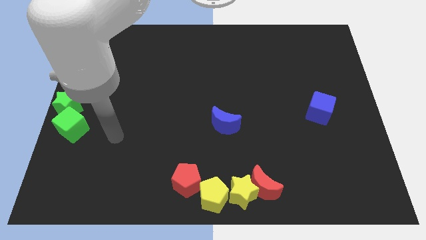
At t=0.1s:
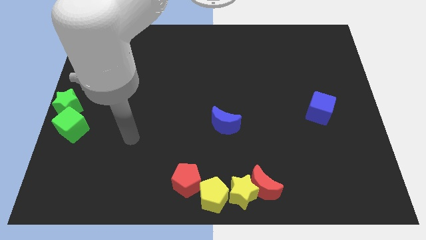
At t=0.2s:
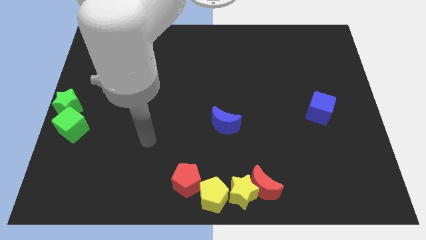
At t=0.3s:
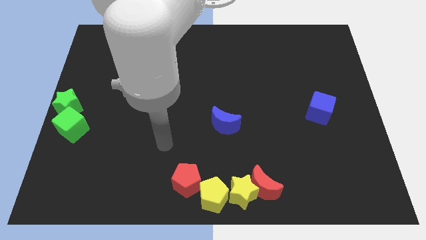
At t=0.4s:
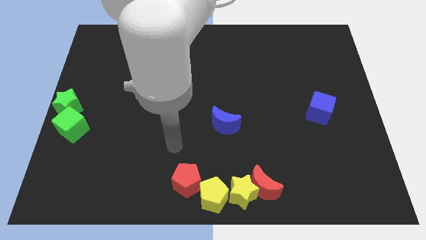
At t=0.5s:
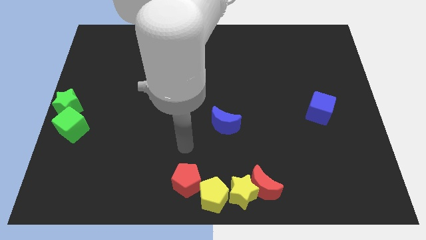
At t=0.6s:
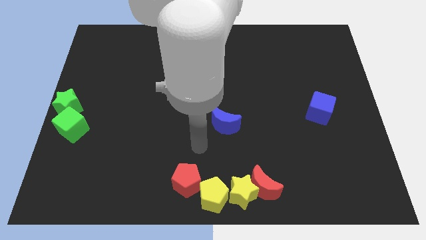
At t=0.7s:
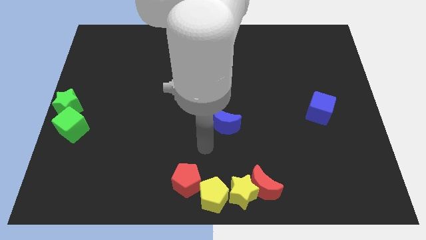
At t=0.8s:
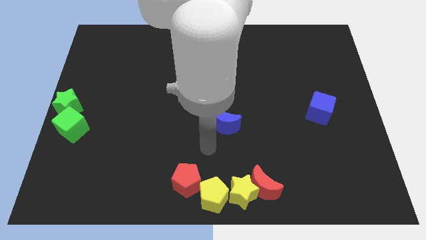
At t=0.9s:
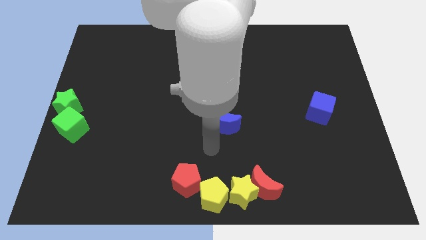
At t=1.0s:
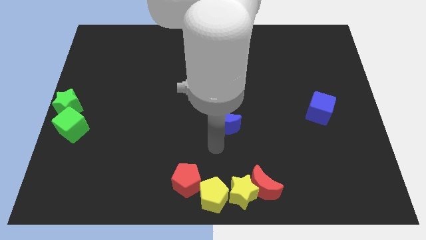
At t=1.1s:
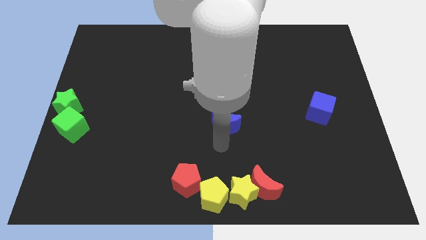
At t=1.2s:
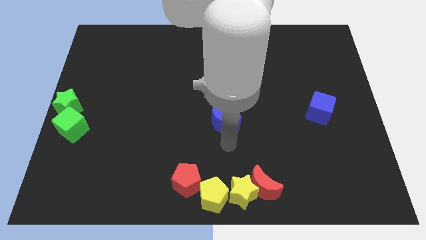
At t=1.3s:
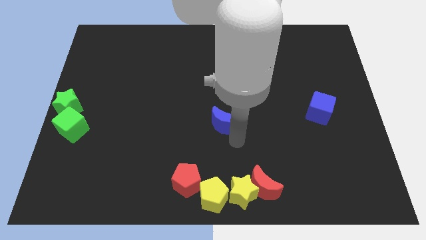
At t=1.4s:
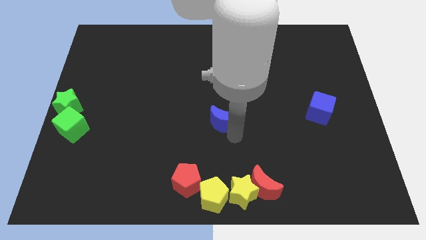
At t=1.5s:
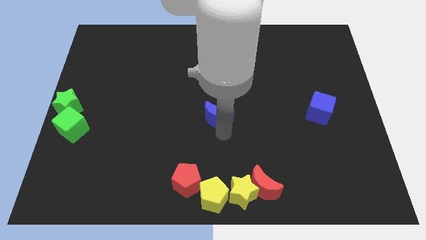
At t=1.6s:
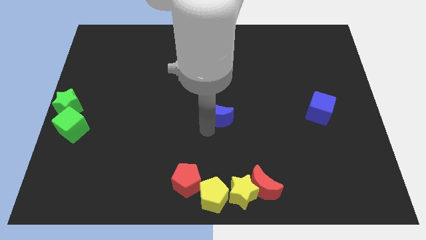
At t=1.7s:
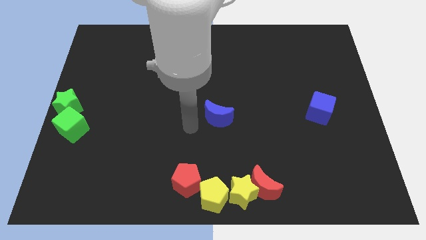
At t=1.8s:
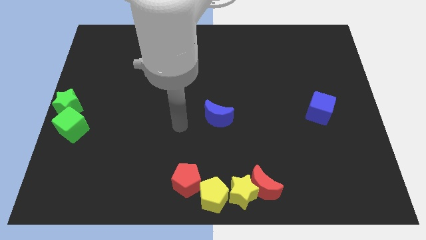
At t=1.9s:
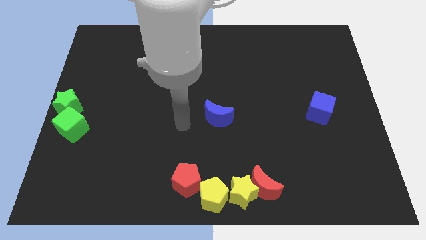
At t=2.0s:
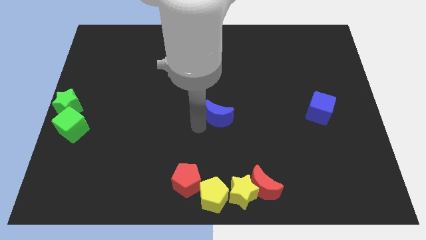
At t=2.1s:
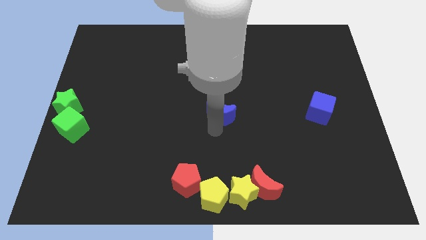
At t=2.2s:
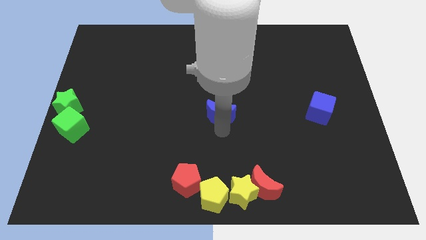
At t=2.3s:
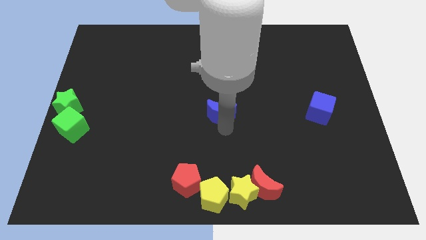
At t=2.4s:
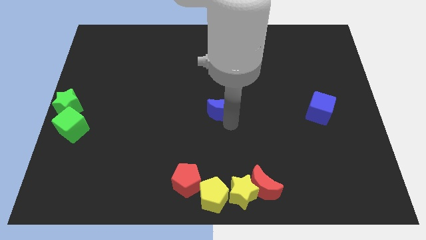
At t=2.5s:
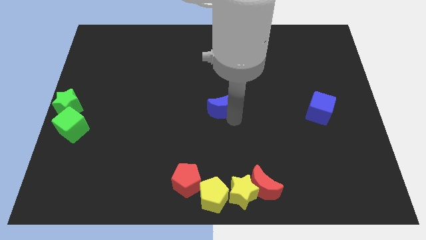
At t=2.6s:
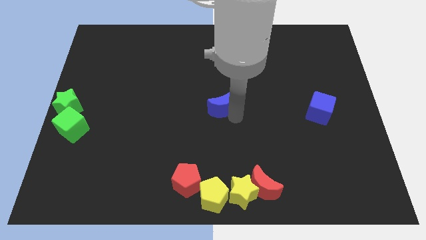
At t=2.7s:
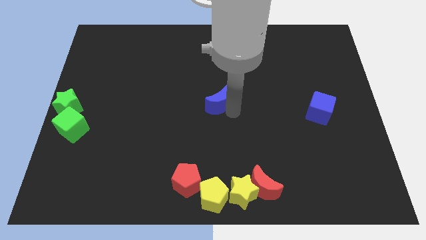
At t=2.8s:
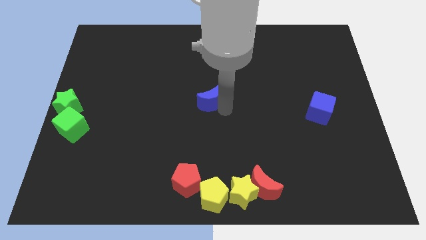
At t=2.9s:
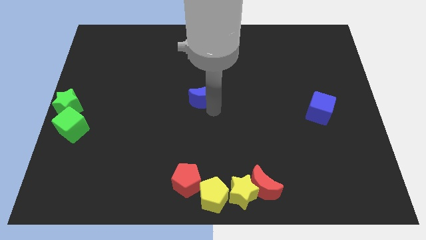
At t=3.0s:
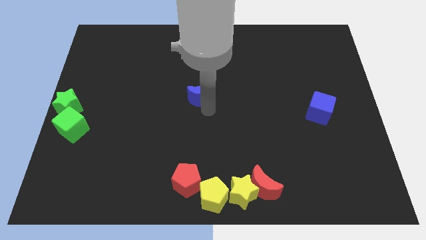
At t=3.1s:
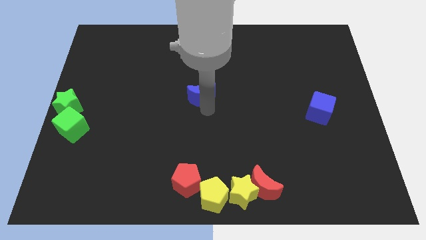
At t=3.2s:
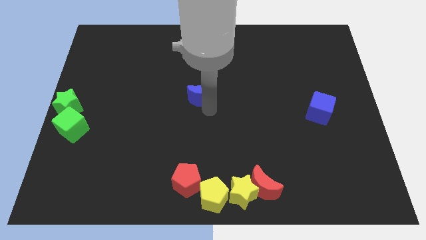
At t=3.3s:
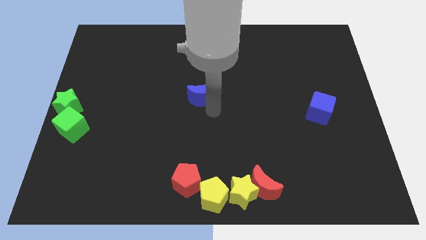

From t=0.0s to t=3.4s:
drag the blue moon to the center of the board

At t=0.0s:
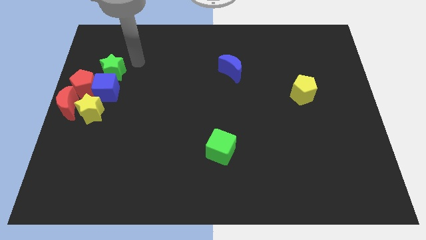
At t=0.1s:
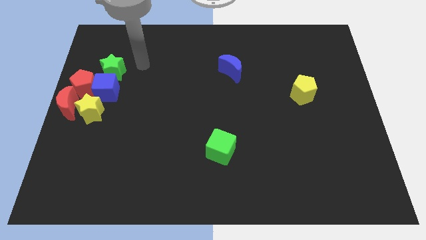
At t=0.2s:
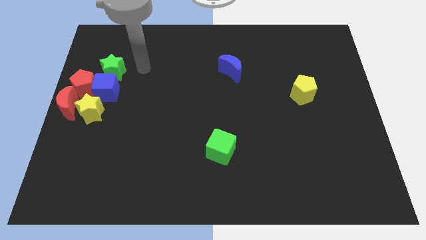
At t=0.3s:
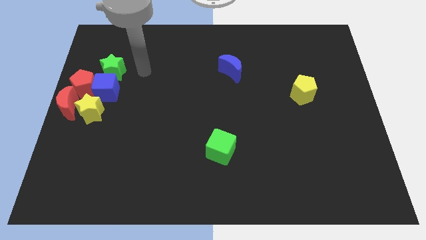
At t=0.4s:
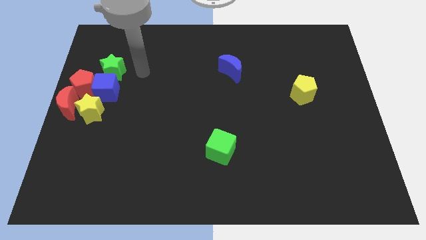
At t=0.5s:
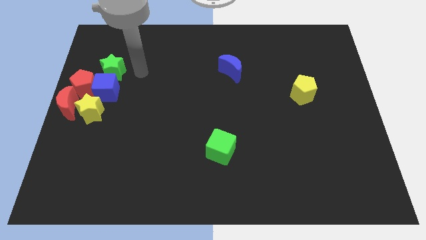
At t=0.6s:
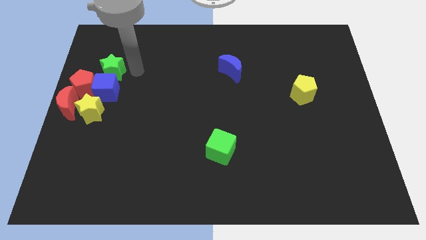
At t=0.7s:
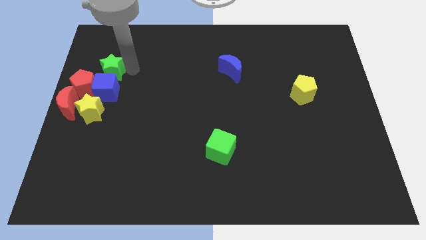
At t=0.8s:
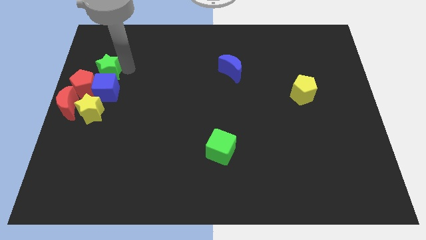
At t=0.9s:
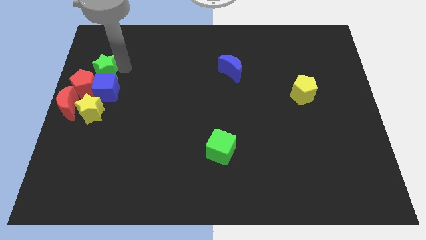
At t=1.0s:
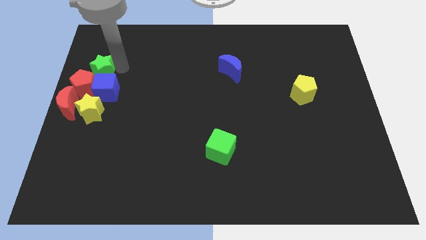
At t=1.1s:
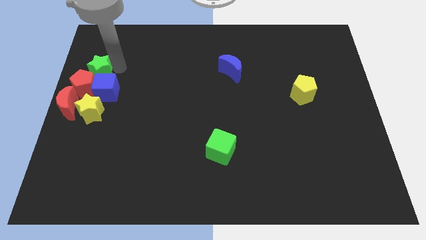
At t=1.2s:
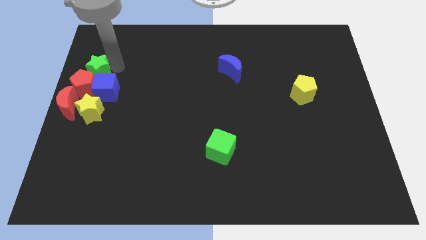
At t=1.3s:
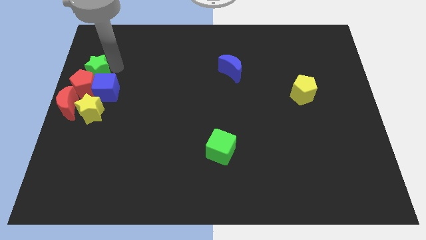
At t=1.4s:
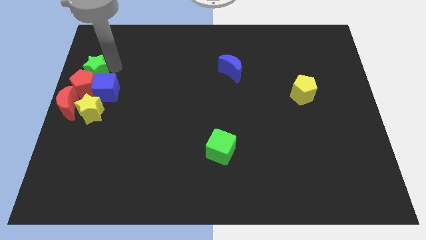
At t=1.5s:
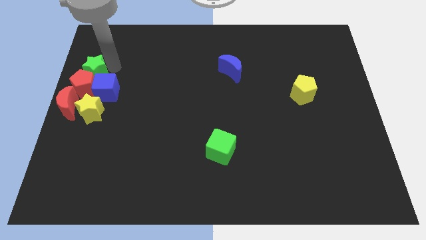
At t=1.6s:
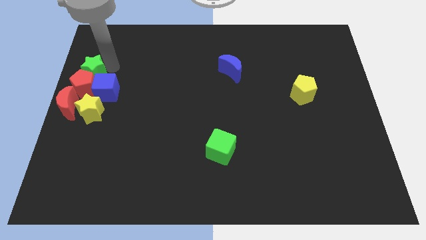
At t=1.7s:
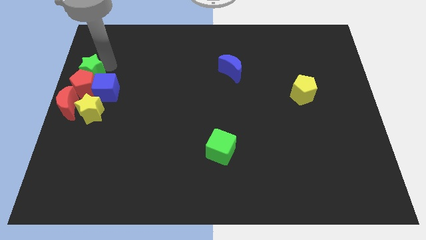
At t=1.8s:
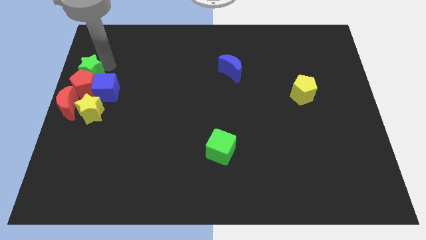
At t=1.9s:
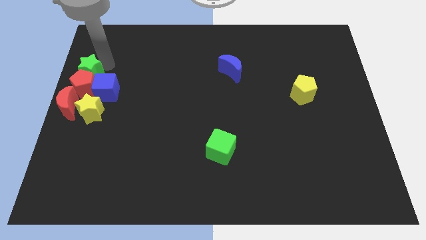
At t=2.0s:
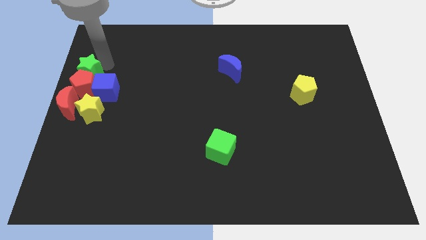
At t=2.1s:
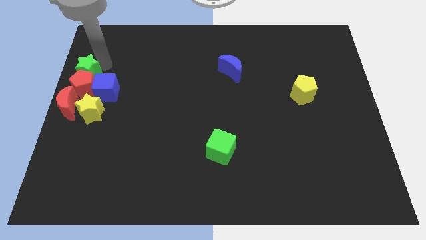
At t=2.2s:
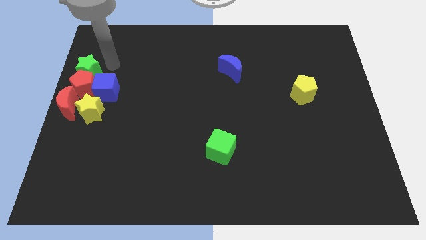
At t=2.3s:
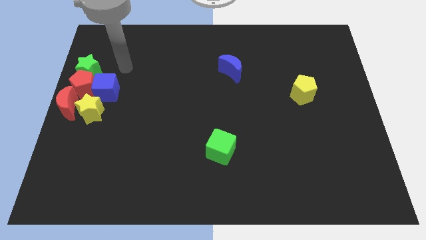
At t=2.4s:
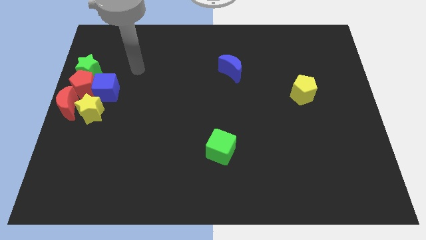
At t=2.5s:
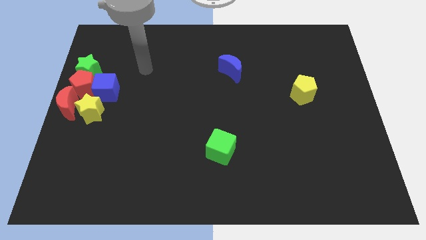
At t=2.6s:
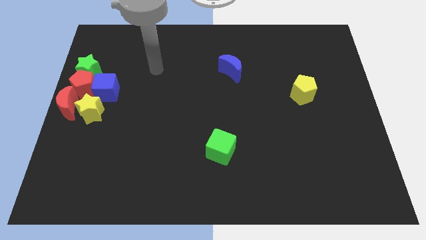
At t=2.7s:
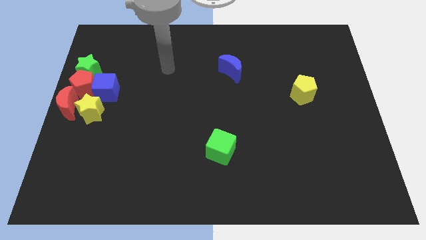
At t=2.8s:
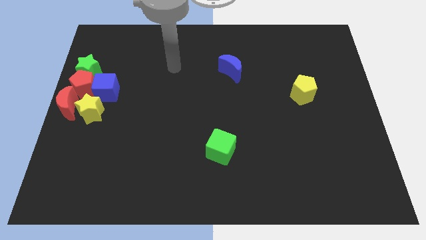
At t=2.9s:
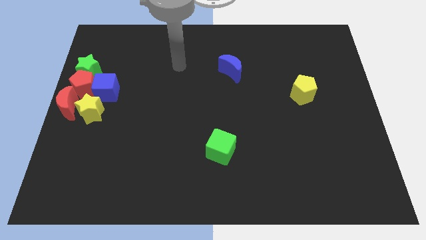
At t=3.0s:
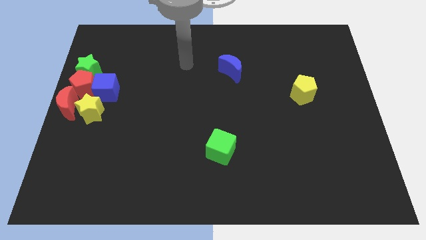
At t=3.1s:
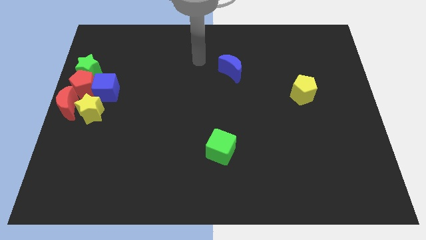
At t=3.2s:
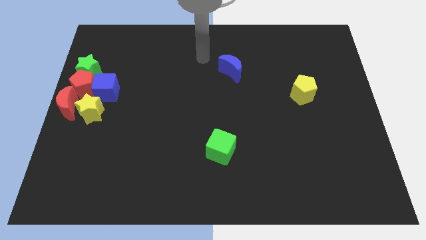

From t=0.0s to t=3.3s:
put the green star at the top of the red pentagon

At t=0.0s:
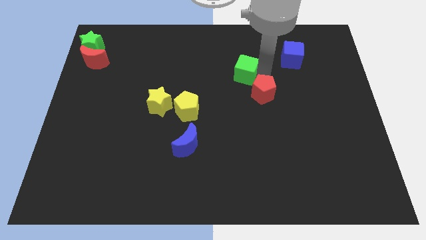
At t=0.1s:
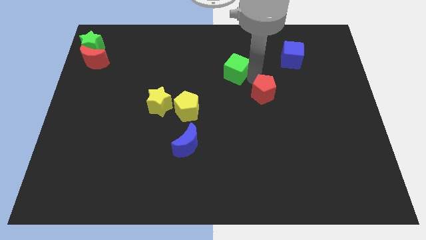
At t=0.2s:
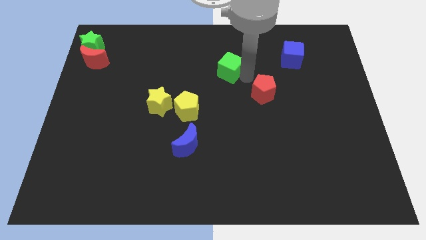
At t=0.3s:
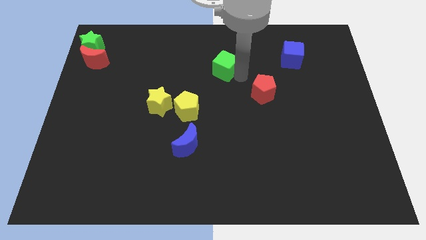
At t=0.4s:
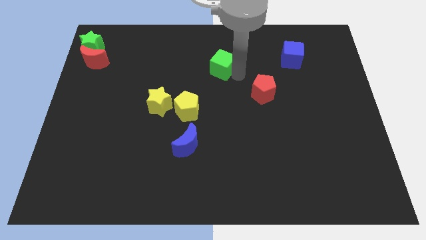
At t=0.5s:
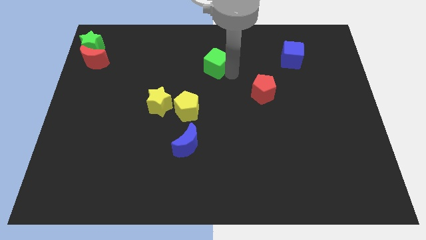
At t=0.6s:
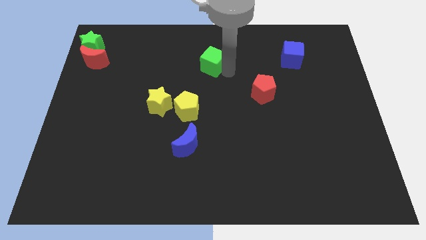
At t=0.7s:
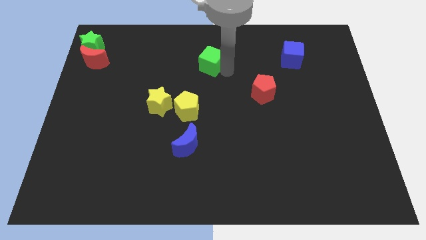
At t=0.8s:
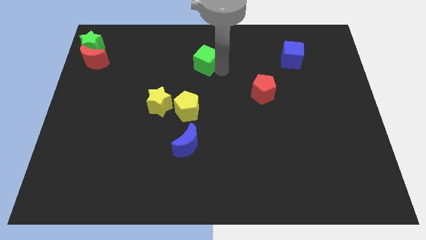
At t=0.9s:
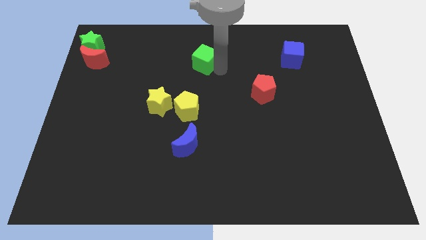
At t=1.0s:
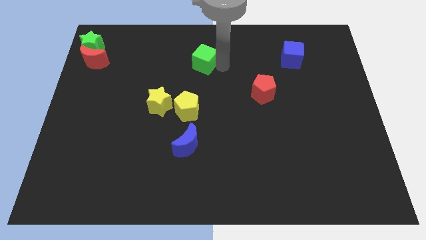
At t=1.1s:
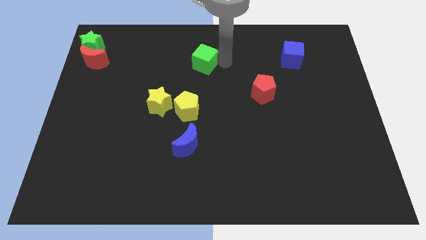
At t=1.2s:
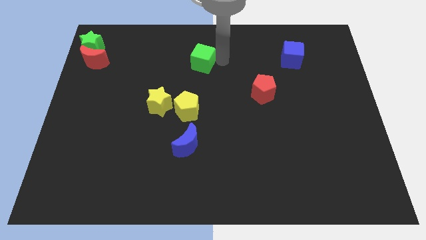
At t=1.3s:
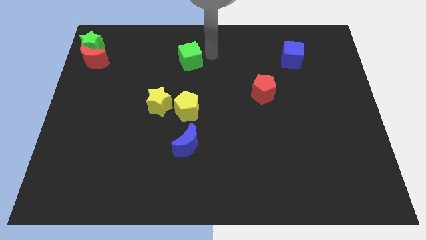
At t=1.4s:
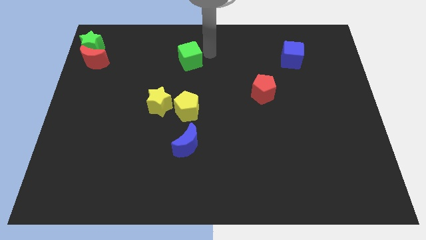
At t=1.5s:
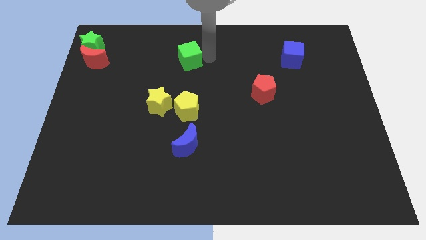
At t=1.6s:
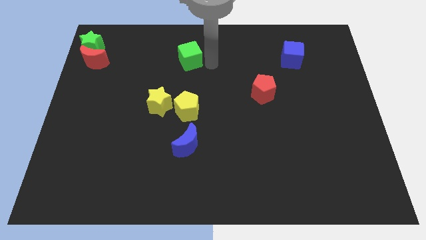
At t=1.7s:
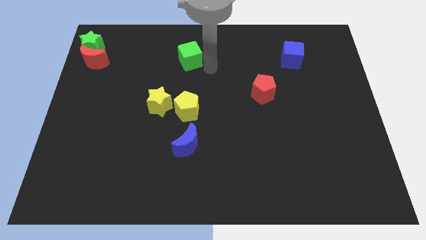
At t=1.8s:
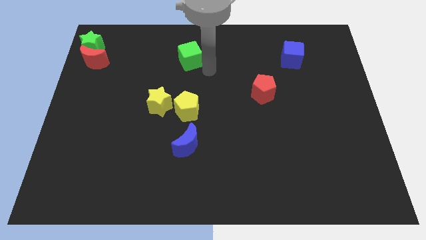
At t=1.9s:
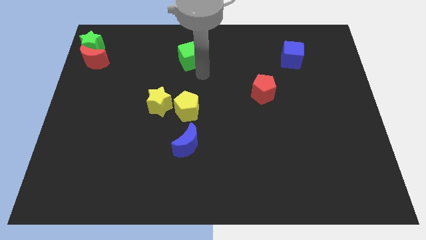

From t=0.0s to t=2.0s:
push the green cube above the yellow pentagon

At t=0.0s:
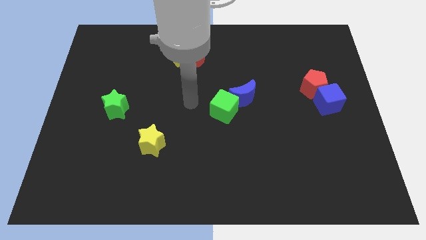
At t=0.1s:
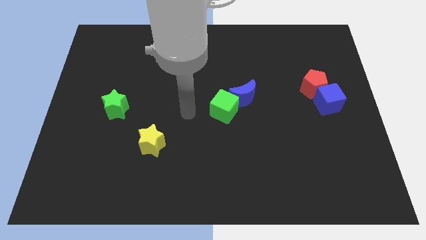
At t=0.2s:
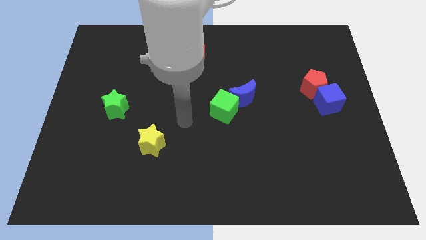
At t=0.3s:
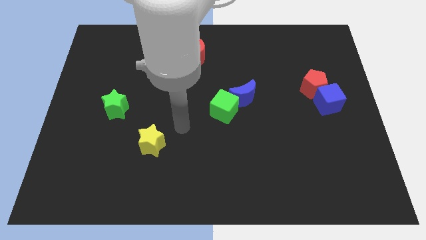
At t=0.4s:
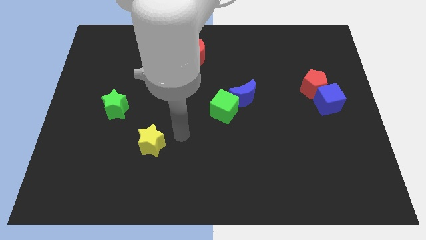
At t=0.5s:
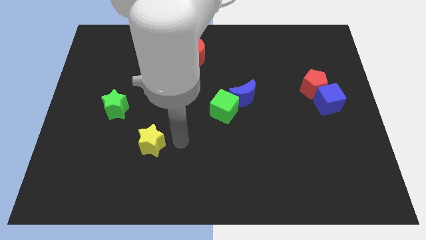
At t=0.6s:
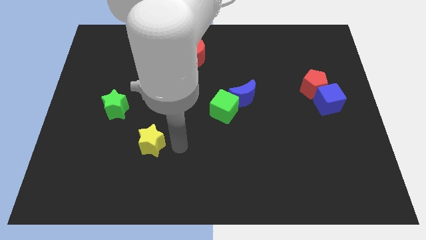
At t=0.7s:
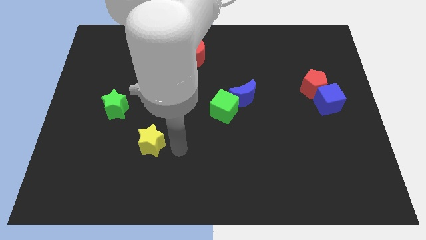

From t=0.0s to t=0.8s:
move arm to the right of the yellow star
